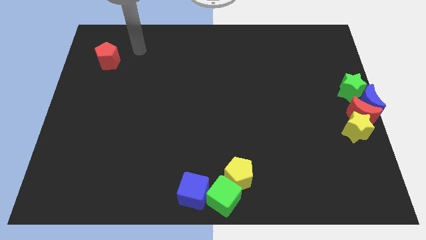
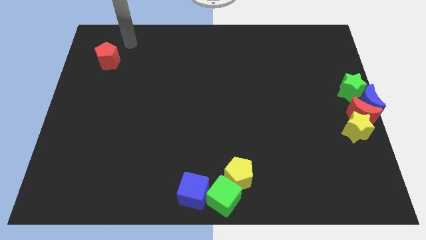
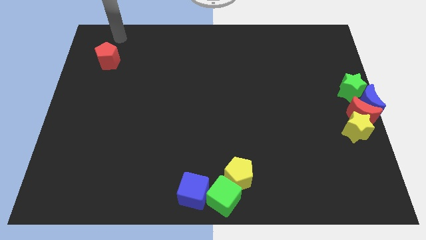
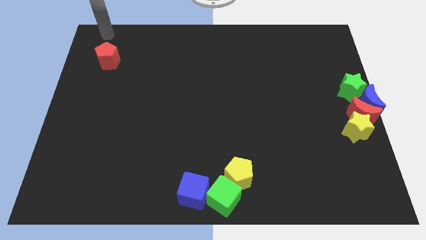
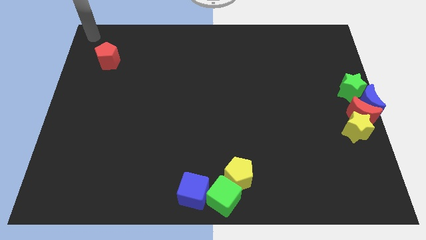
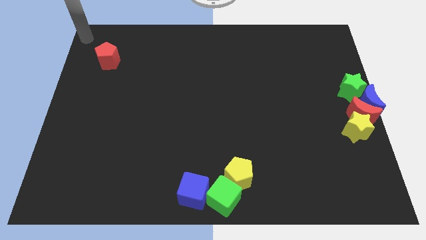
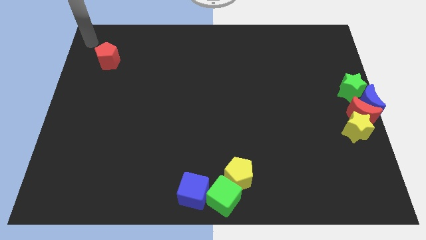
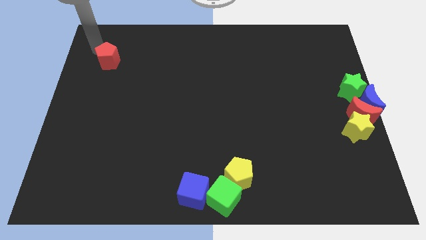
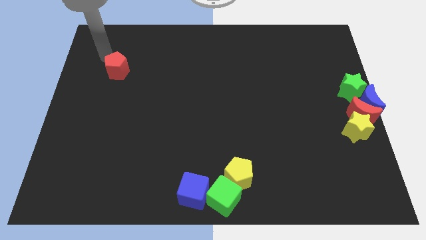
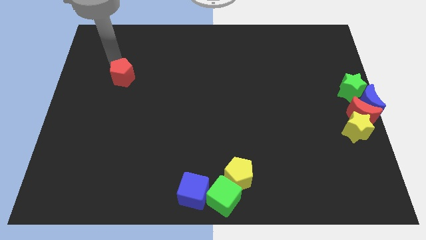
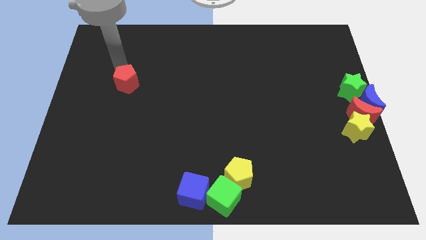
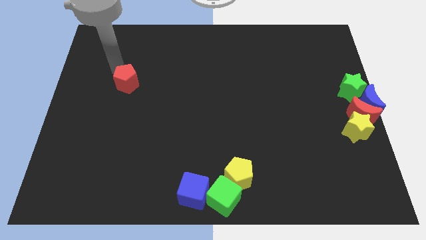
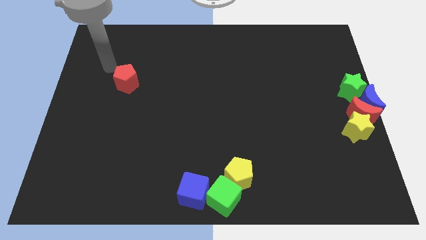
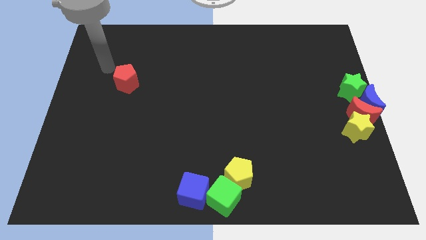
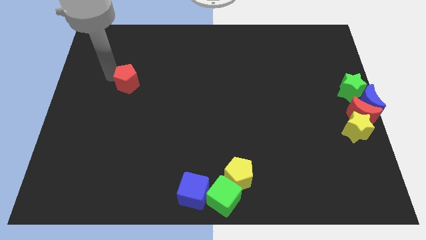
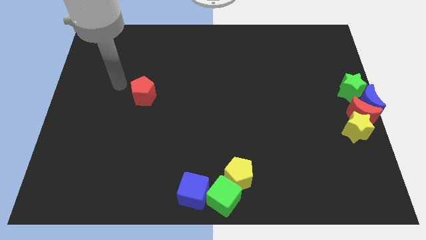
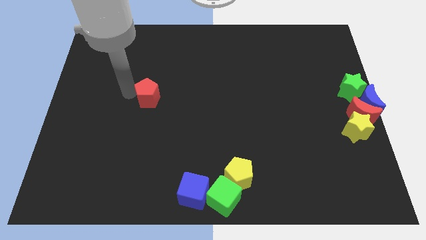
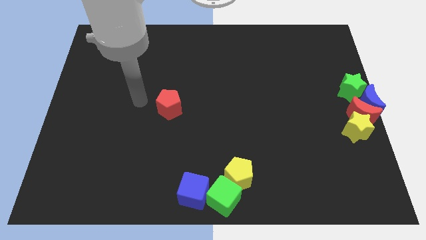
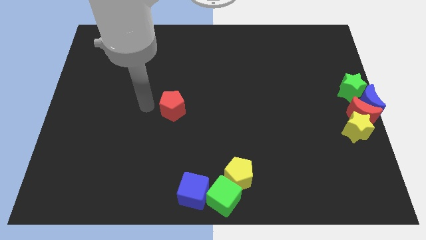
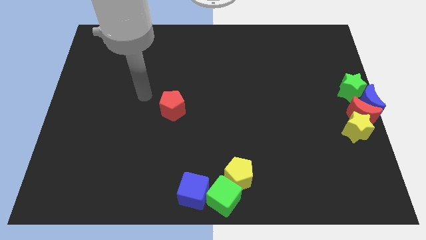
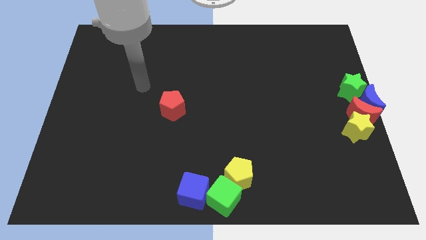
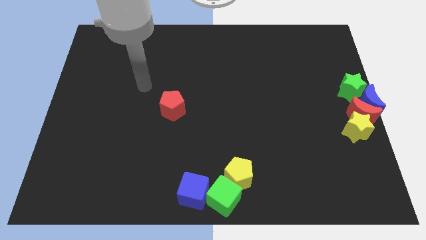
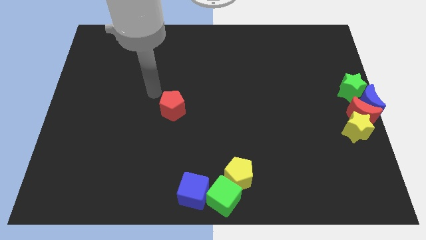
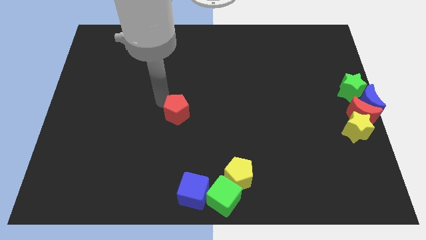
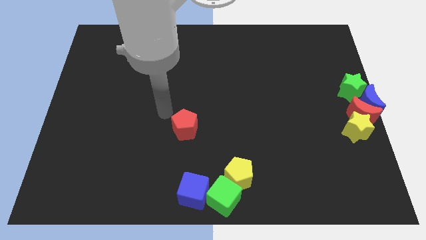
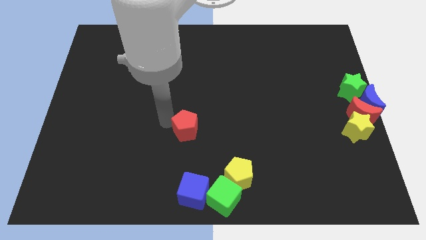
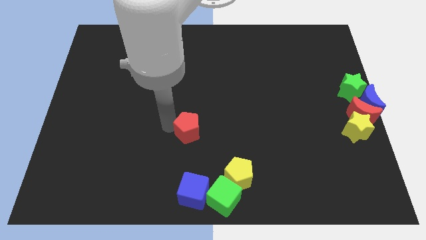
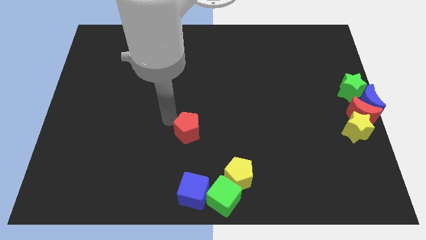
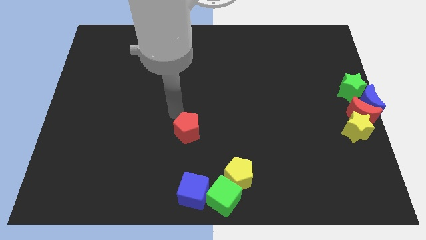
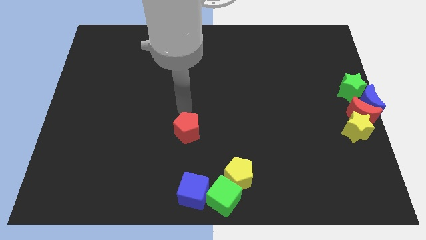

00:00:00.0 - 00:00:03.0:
push the red pentagon parallel to the top blue cube

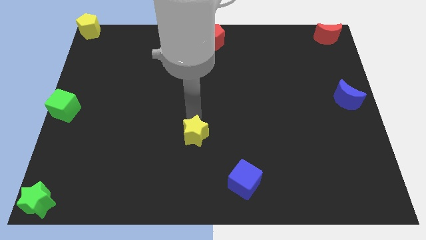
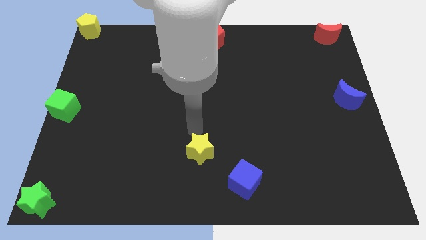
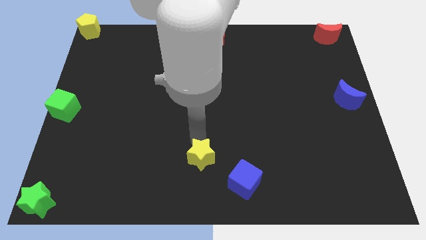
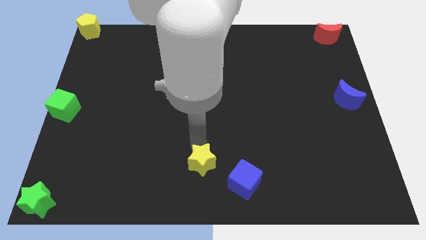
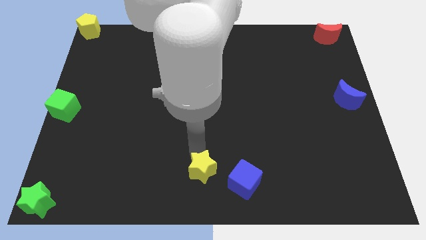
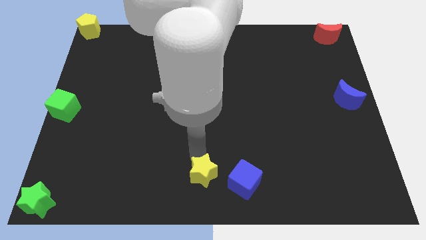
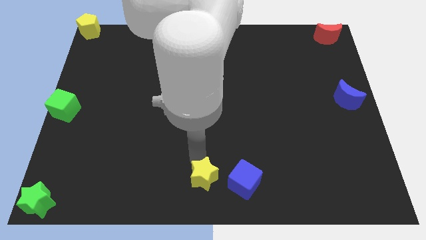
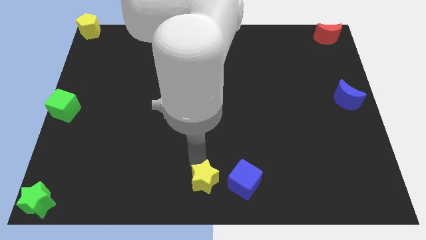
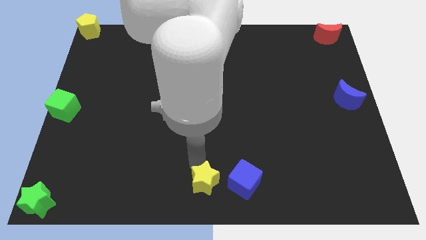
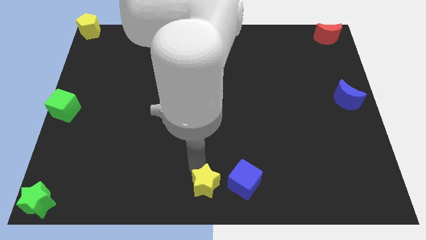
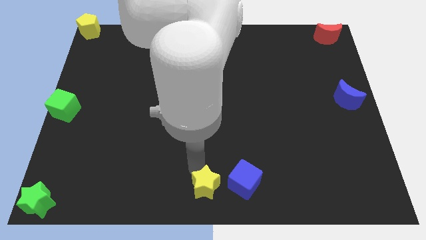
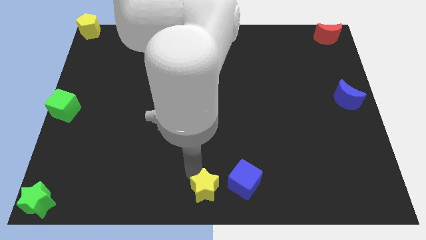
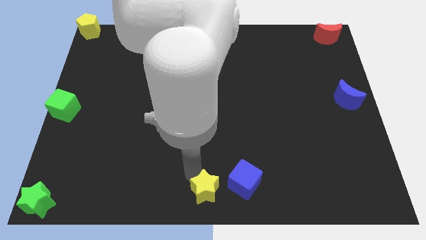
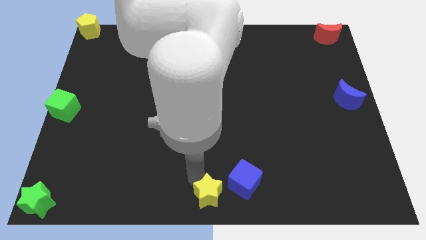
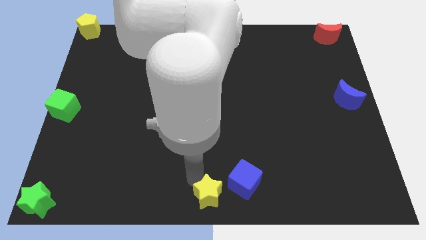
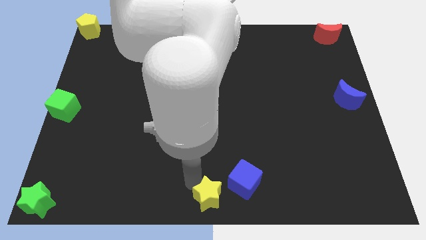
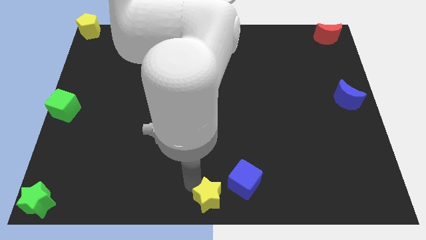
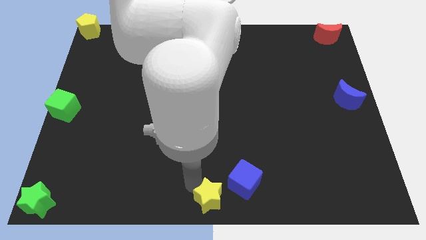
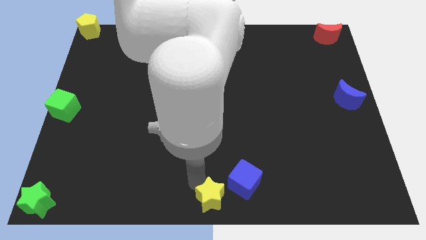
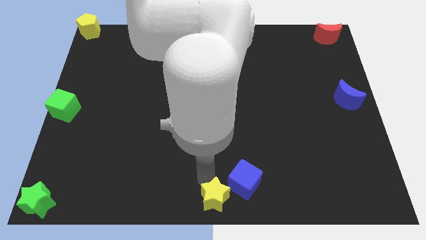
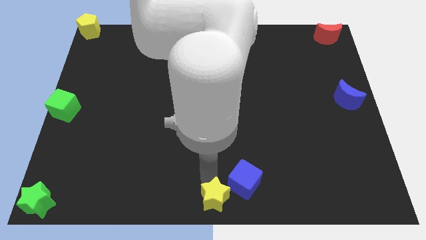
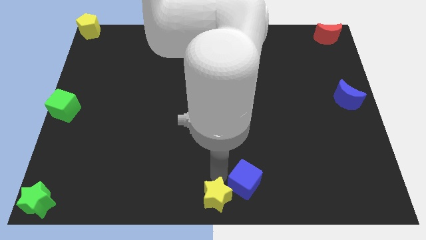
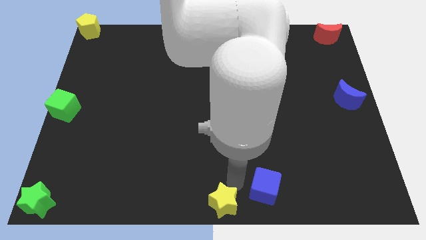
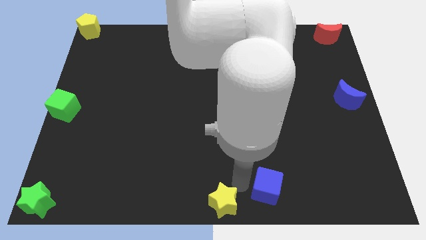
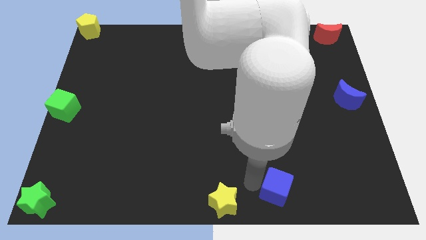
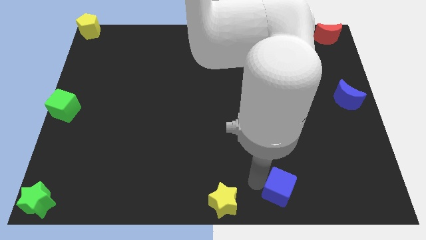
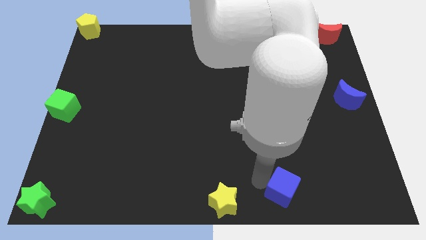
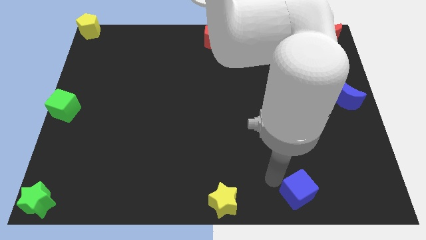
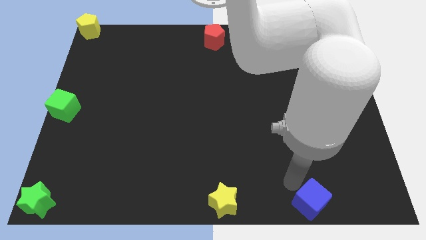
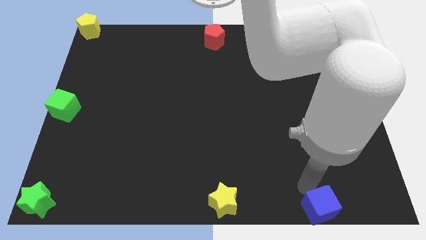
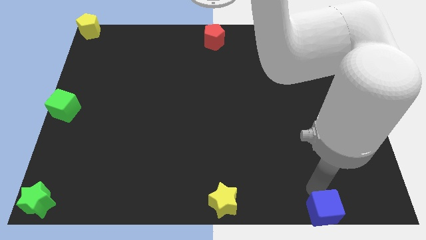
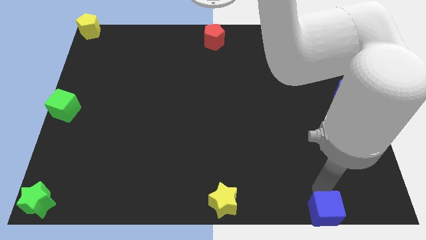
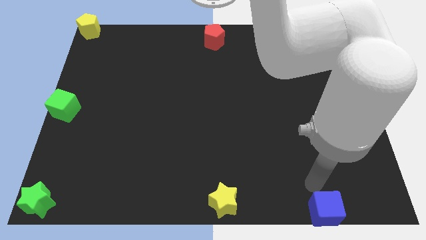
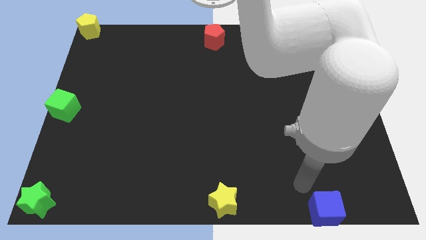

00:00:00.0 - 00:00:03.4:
push the yellow star and blue cube to the bottom

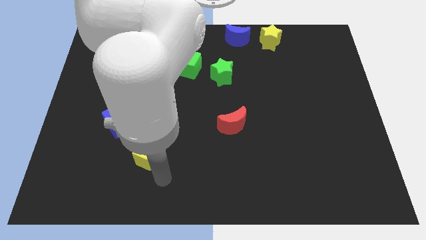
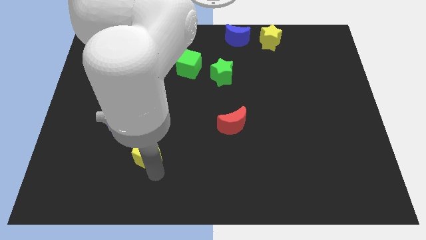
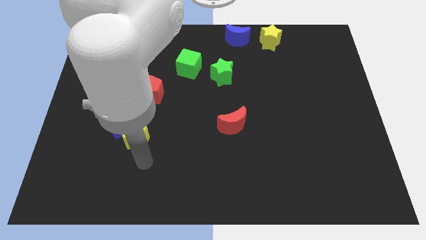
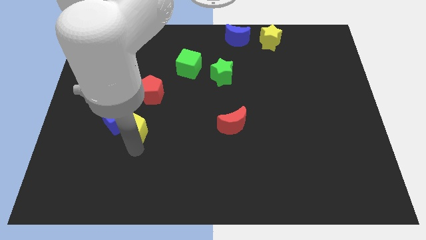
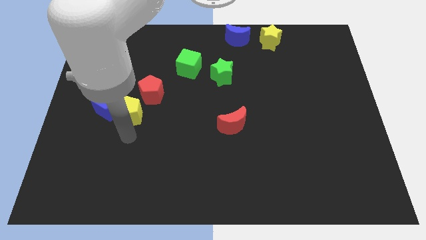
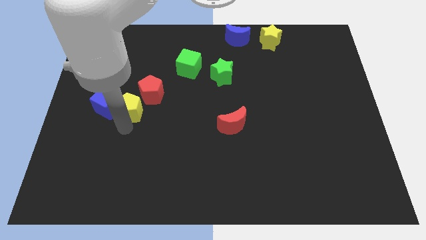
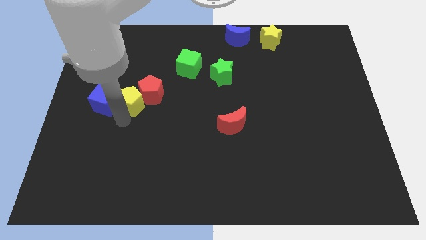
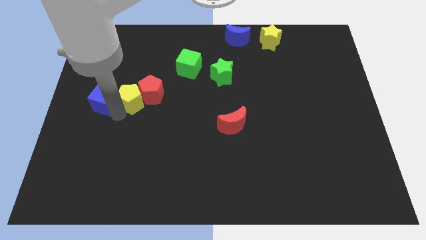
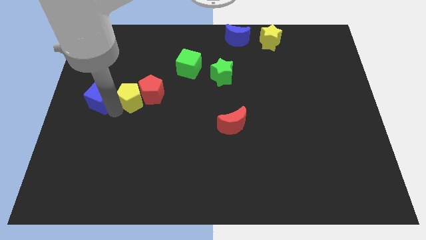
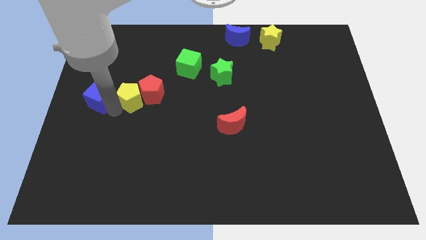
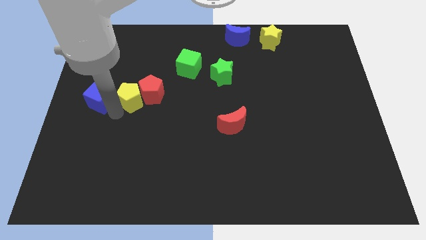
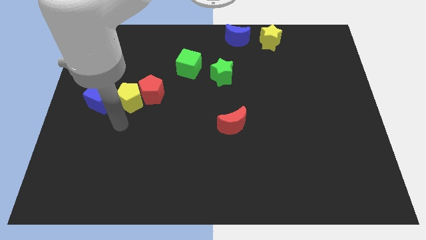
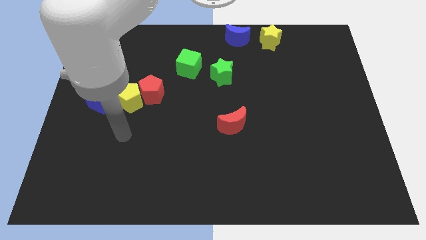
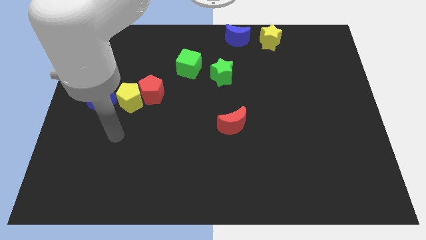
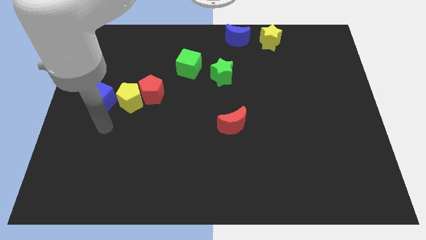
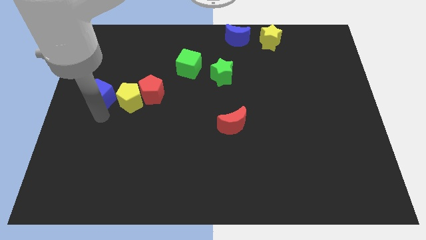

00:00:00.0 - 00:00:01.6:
move the yellow pentagon to the left of the red pentagon

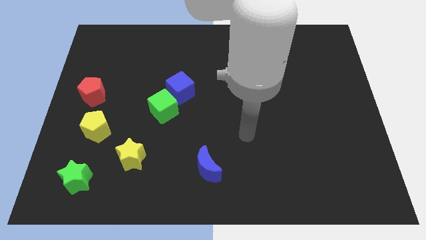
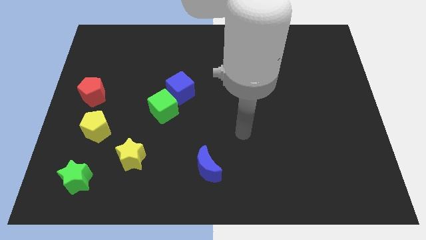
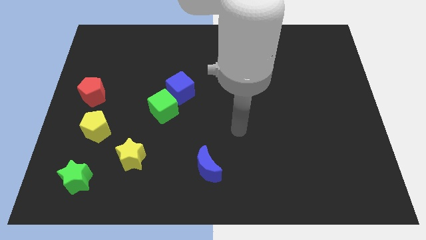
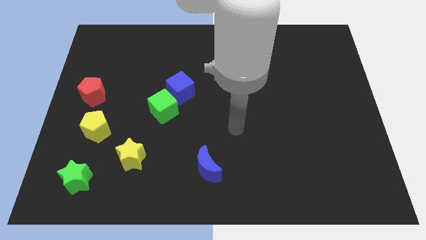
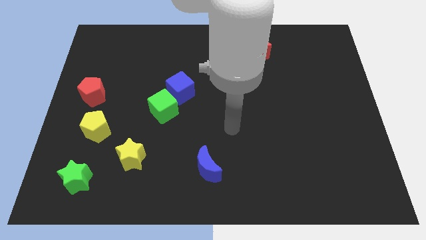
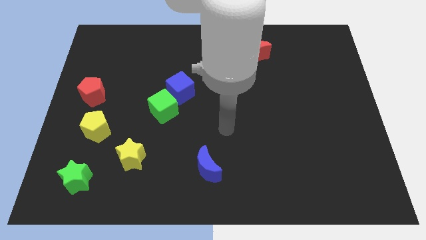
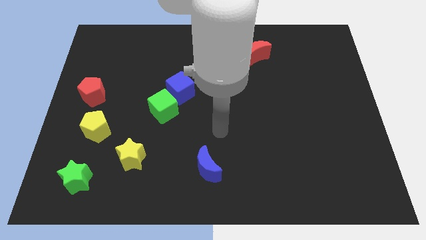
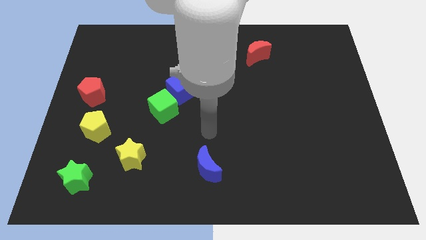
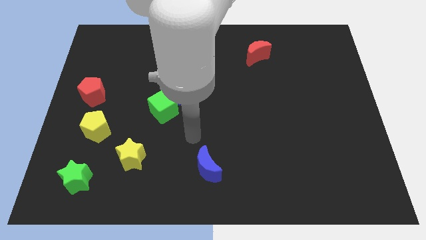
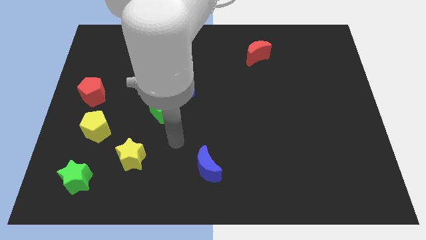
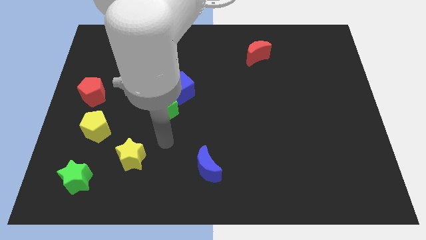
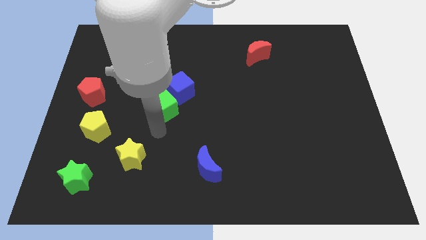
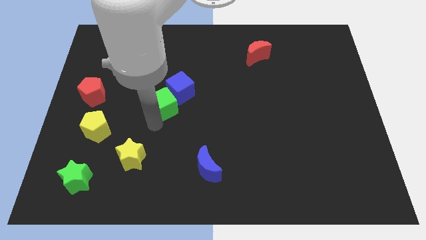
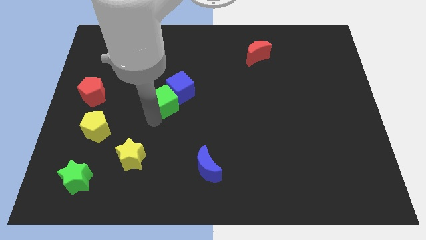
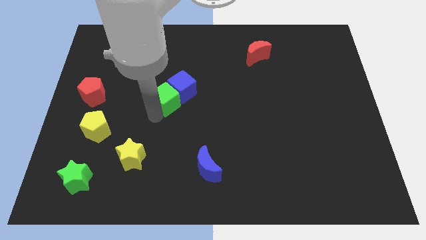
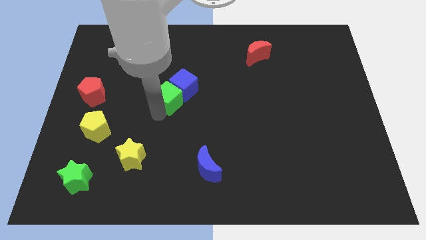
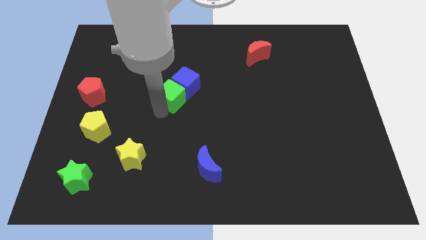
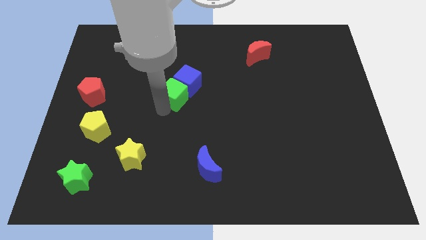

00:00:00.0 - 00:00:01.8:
move the green cube into the blue cube
